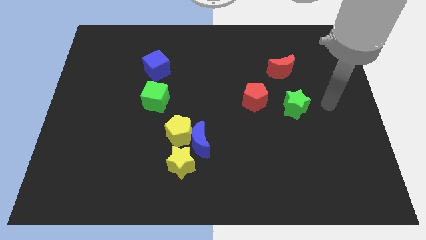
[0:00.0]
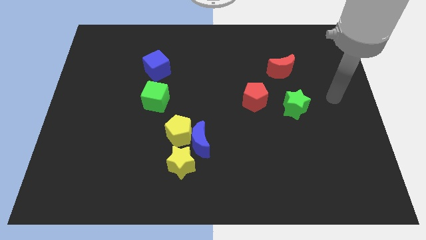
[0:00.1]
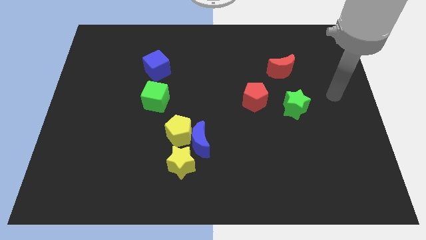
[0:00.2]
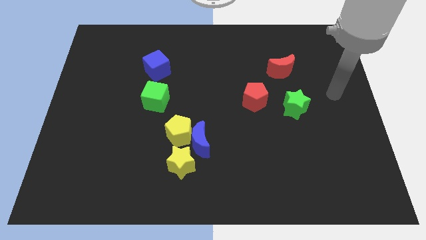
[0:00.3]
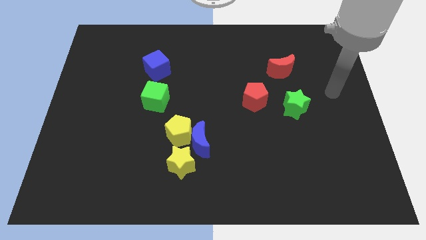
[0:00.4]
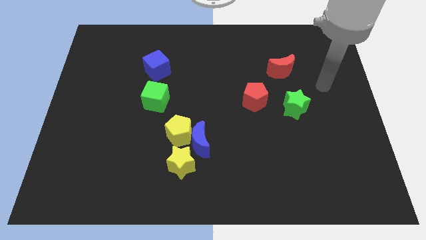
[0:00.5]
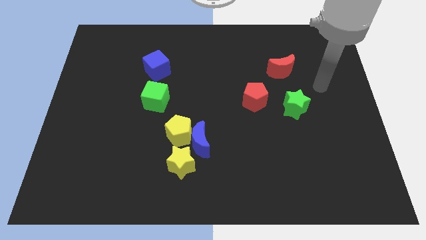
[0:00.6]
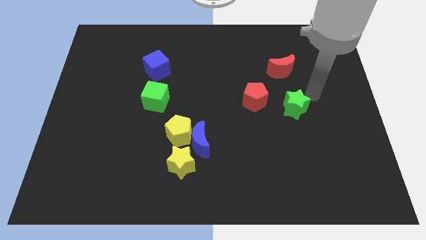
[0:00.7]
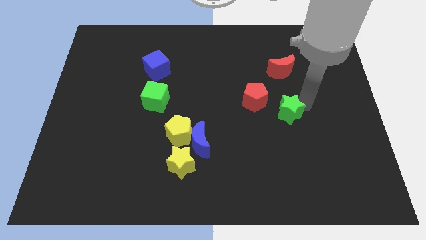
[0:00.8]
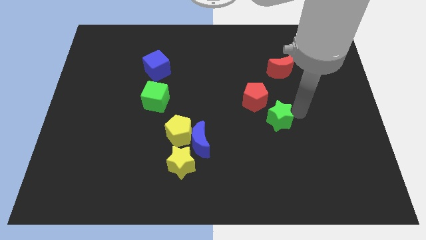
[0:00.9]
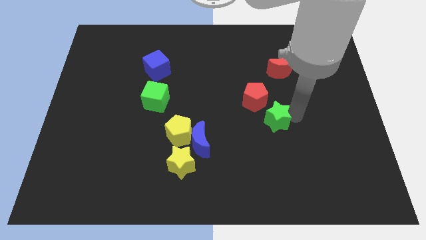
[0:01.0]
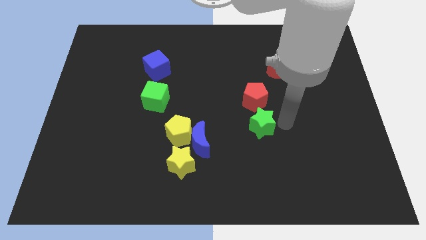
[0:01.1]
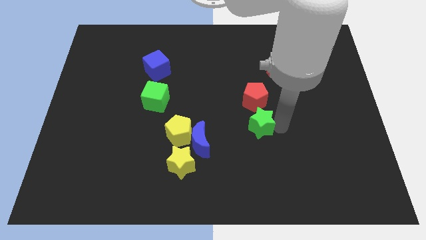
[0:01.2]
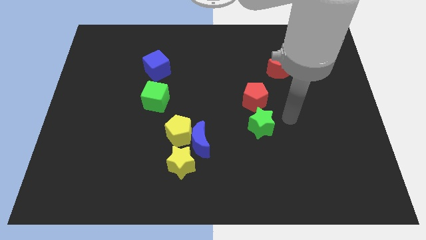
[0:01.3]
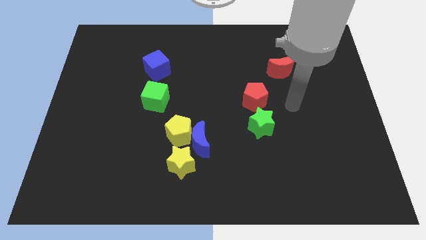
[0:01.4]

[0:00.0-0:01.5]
place the green star vertically below the red pentagon

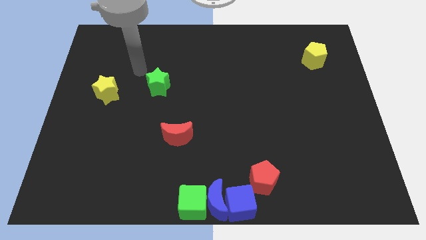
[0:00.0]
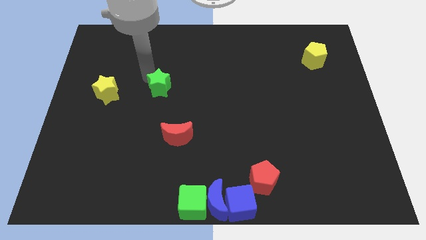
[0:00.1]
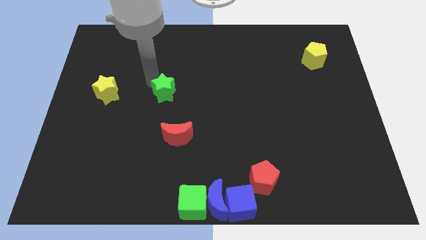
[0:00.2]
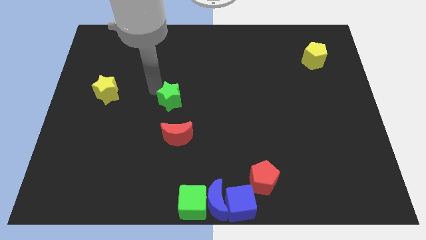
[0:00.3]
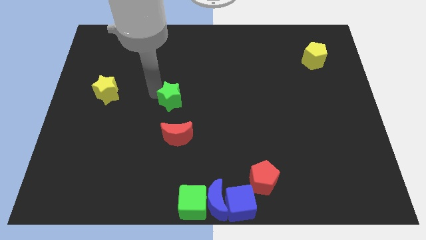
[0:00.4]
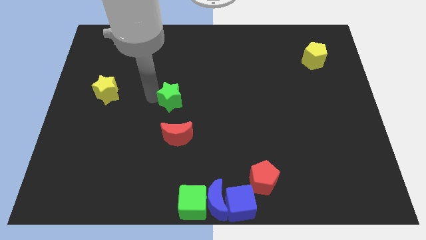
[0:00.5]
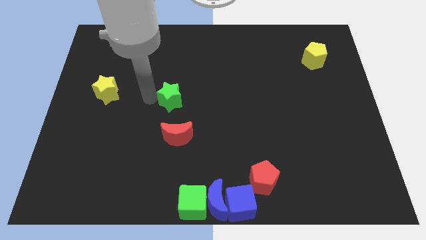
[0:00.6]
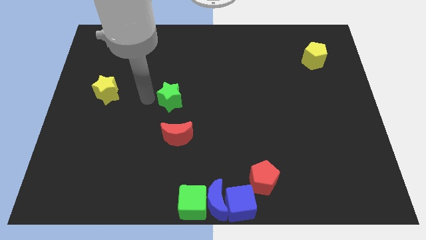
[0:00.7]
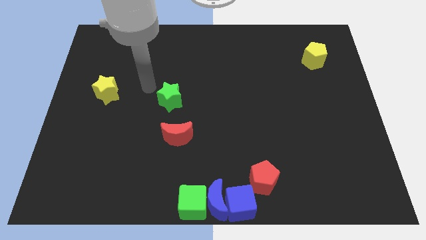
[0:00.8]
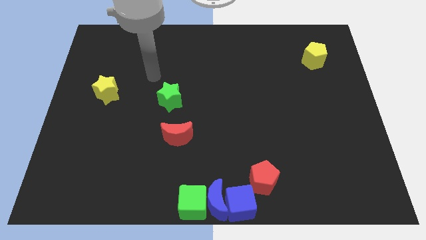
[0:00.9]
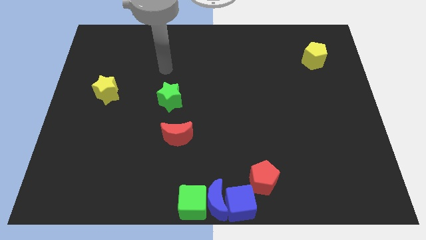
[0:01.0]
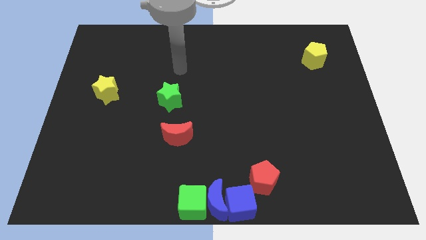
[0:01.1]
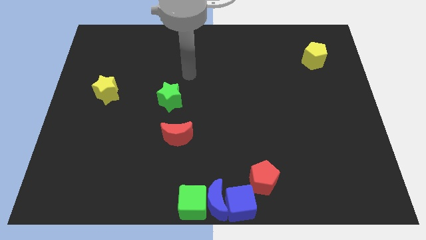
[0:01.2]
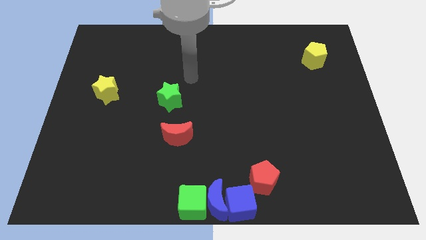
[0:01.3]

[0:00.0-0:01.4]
move the green star above the red crescent

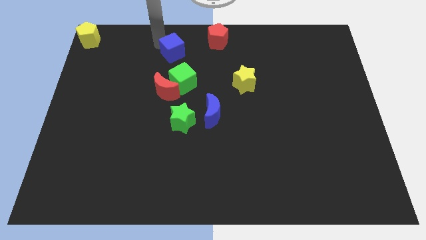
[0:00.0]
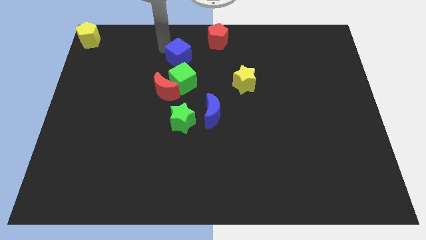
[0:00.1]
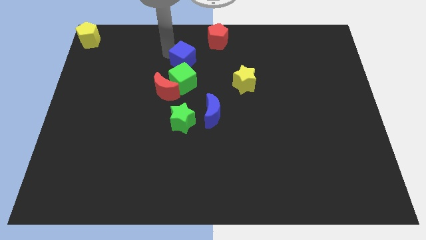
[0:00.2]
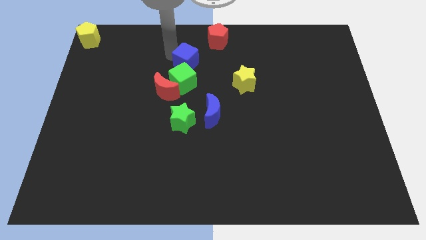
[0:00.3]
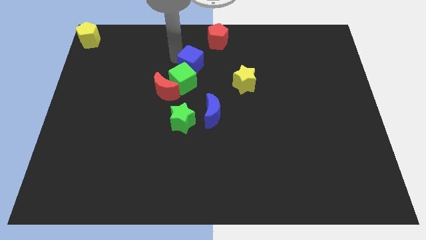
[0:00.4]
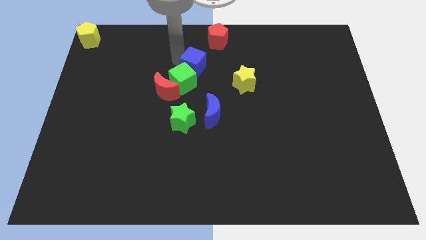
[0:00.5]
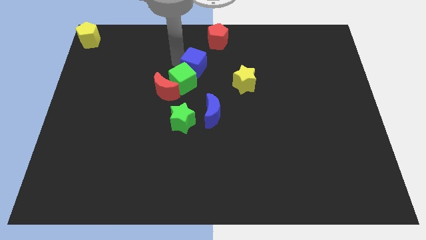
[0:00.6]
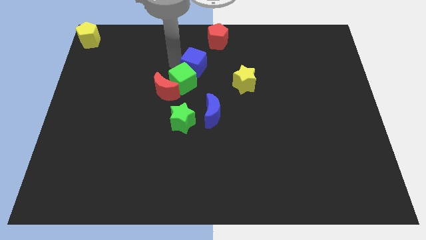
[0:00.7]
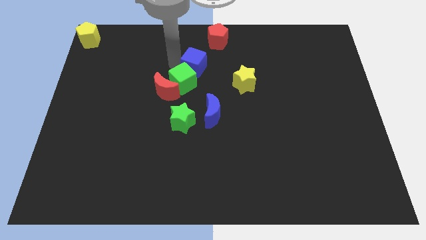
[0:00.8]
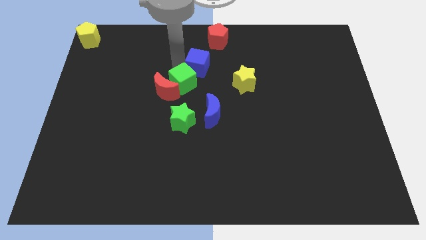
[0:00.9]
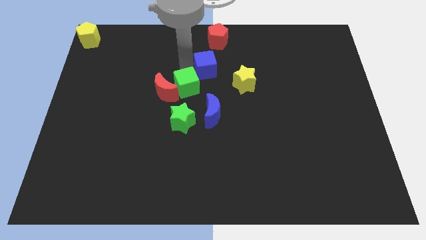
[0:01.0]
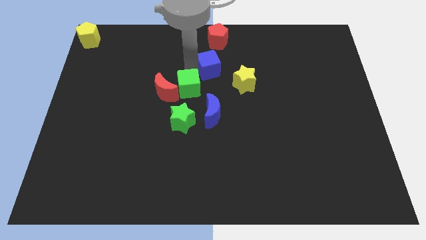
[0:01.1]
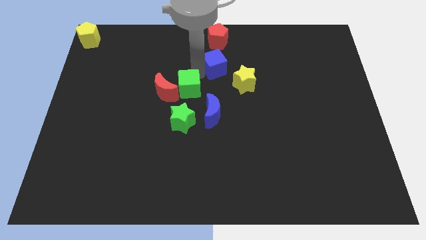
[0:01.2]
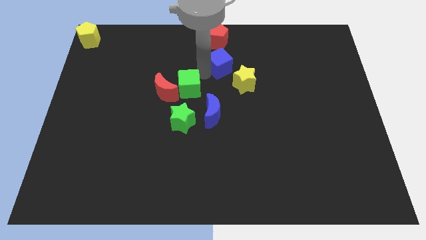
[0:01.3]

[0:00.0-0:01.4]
move the blue cube below the red pentagon

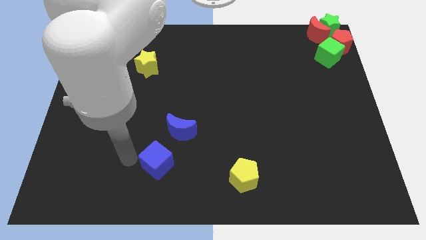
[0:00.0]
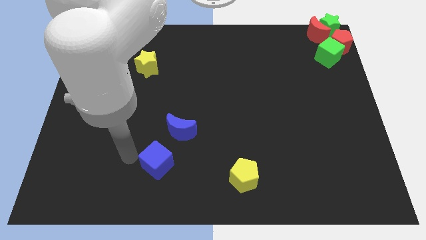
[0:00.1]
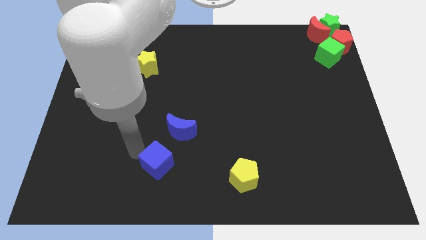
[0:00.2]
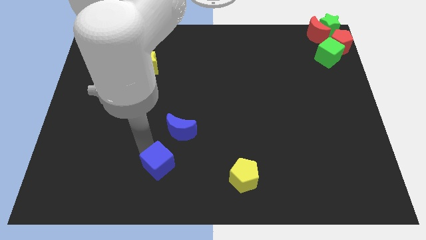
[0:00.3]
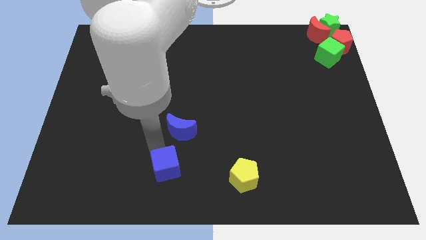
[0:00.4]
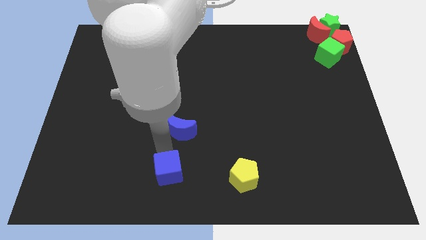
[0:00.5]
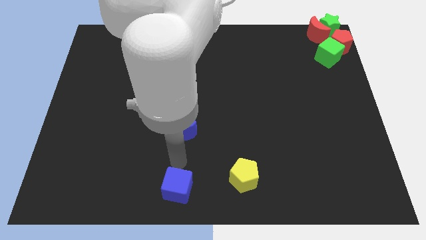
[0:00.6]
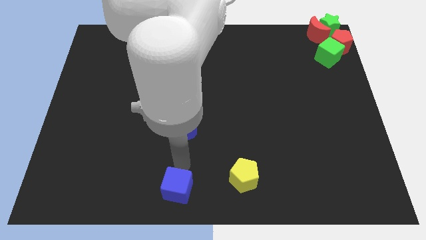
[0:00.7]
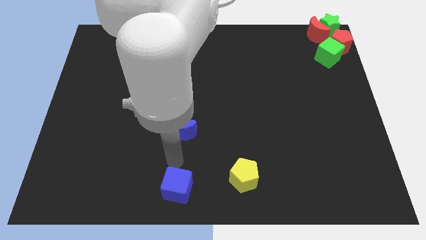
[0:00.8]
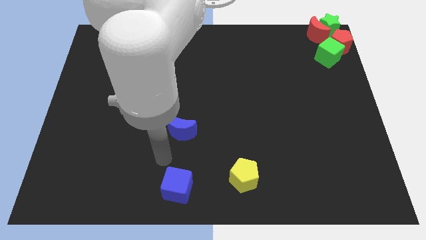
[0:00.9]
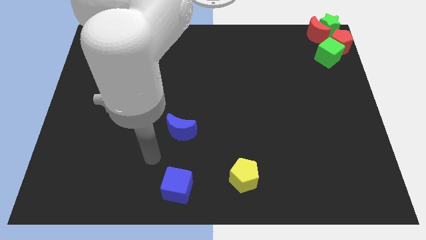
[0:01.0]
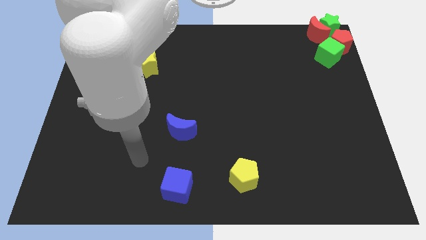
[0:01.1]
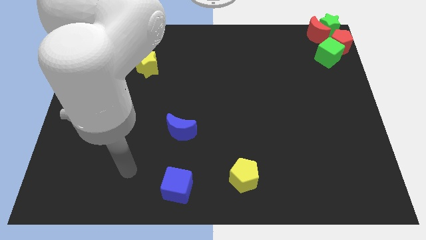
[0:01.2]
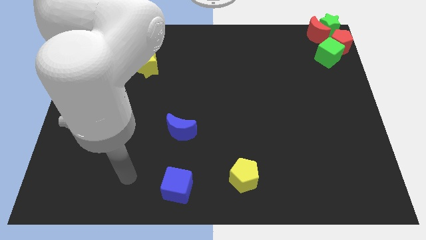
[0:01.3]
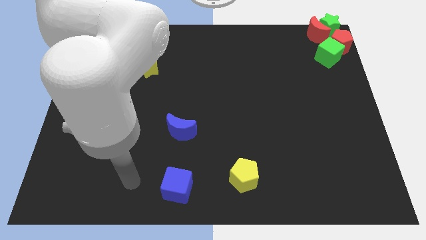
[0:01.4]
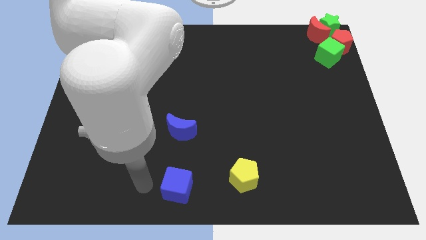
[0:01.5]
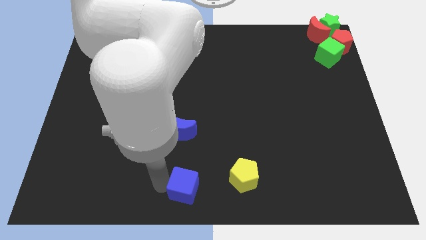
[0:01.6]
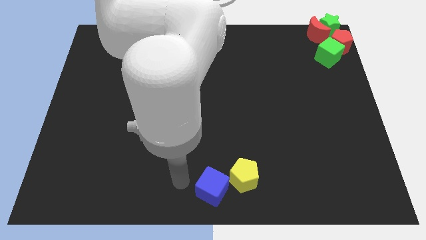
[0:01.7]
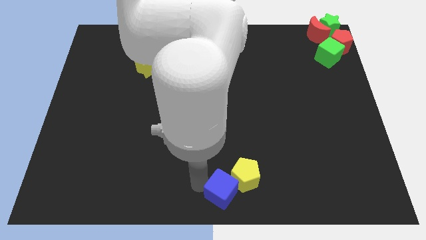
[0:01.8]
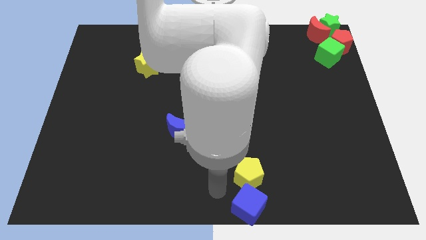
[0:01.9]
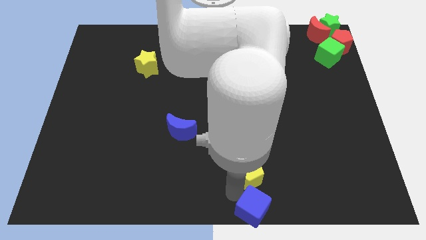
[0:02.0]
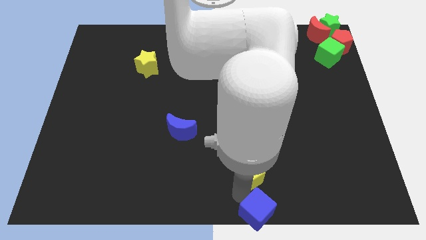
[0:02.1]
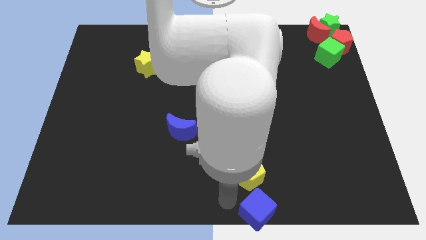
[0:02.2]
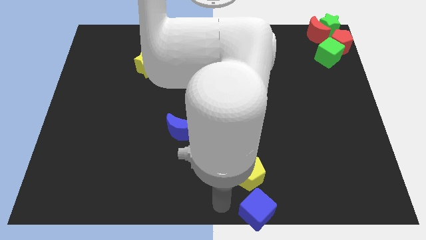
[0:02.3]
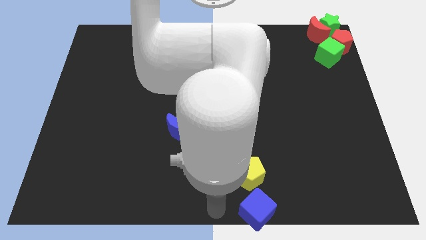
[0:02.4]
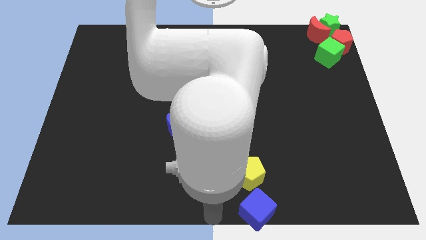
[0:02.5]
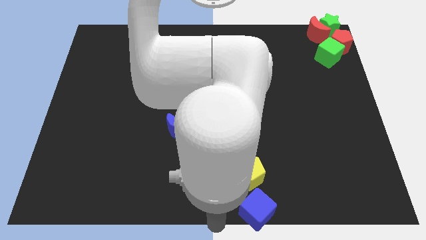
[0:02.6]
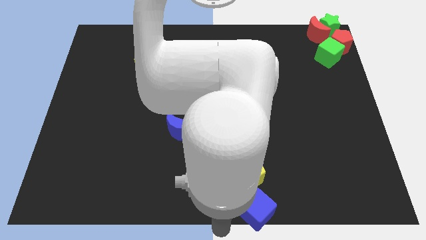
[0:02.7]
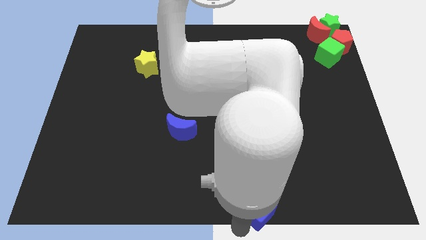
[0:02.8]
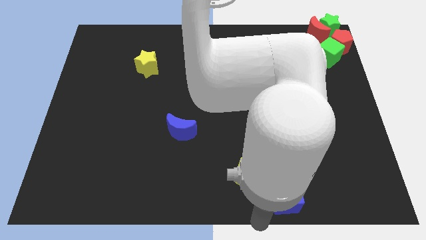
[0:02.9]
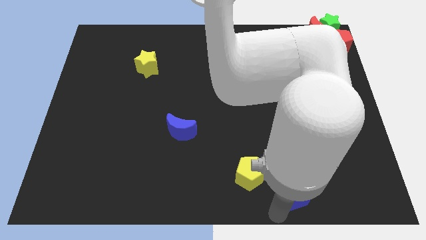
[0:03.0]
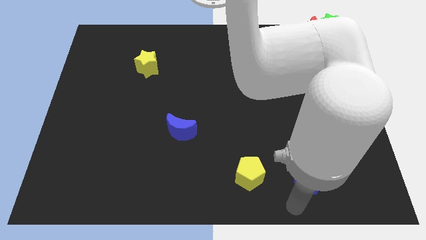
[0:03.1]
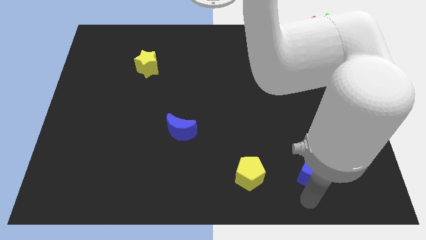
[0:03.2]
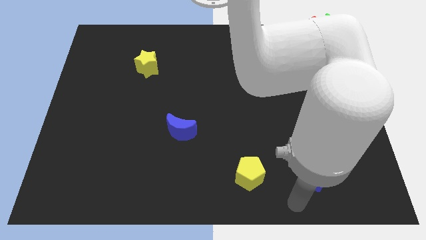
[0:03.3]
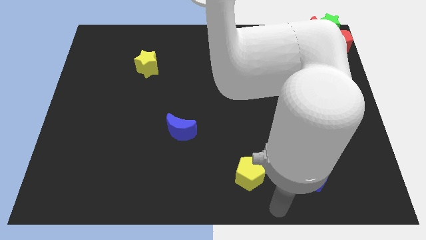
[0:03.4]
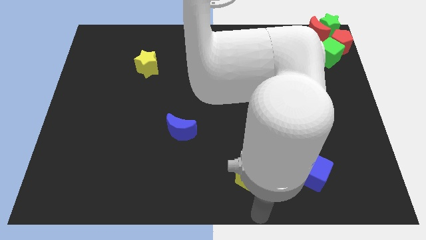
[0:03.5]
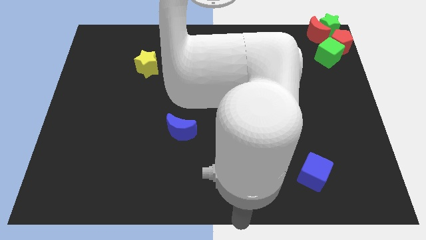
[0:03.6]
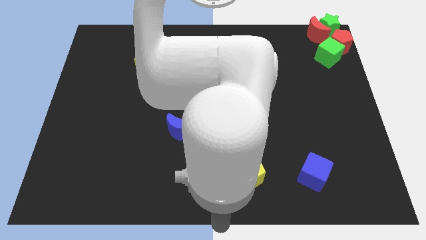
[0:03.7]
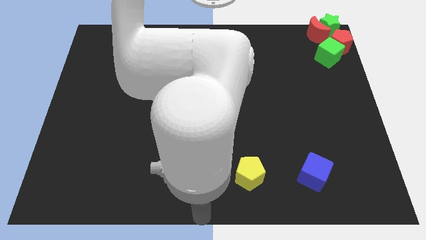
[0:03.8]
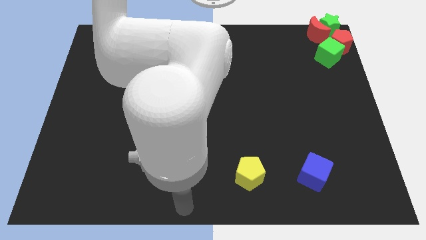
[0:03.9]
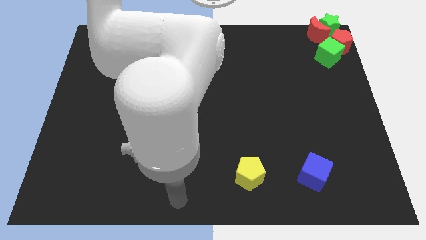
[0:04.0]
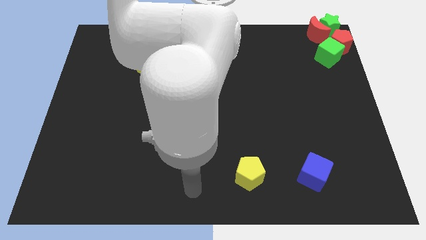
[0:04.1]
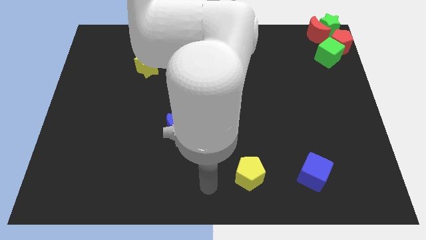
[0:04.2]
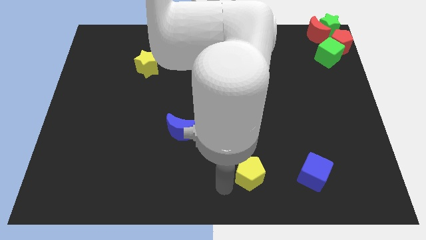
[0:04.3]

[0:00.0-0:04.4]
push the blue cube parallel right to the yellow pentagon

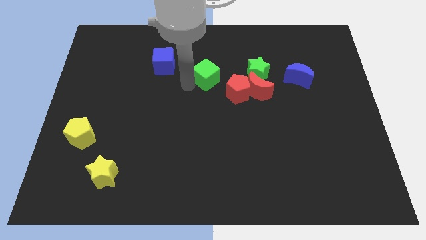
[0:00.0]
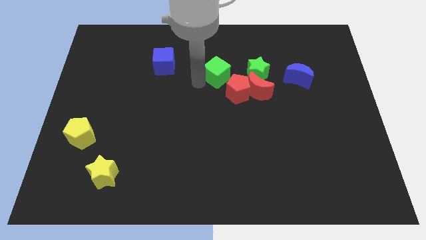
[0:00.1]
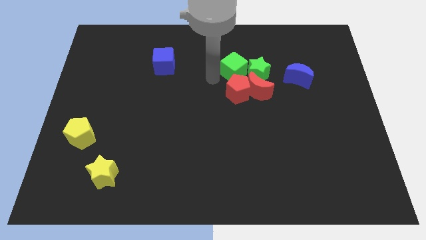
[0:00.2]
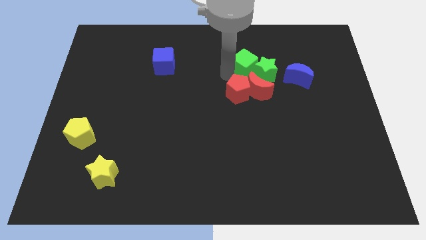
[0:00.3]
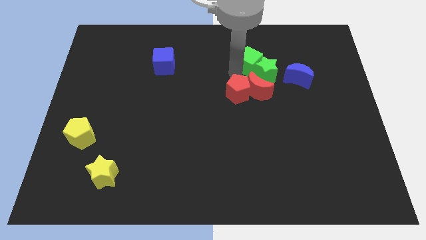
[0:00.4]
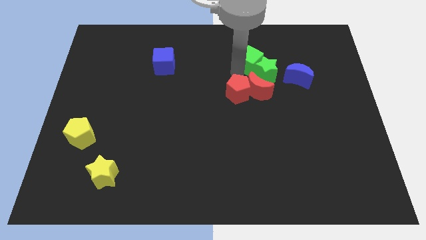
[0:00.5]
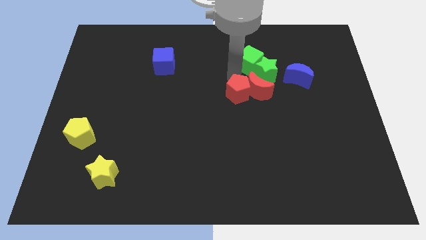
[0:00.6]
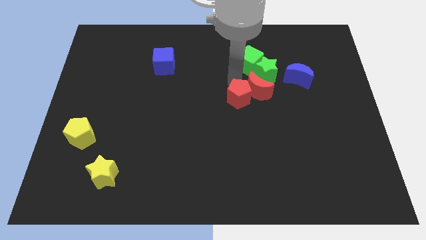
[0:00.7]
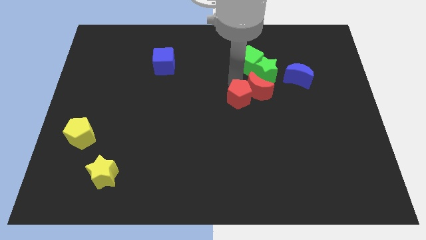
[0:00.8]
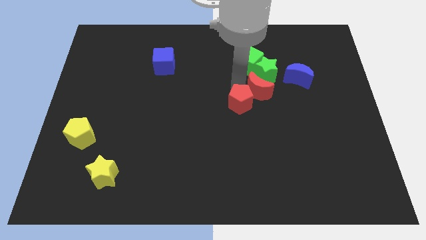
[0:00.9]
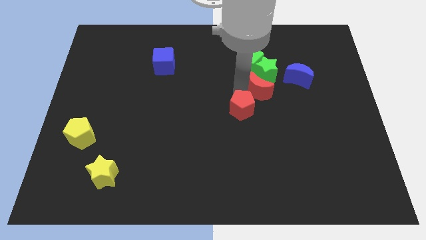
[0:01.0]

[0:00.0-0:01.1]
slide green cube into green star
